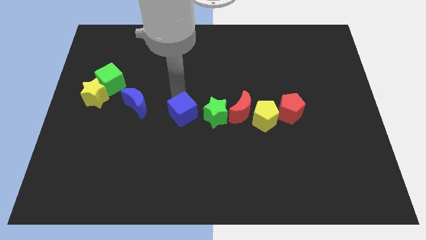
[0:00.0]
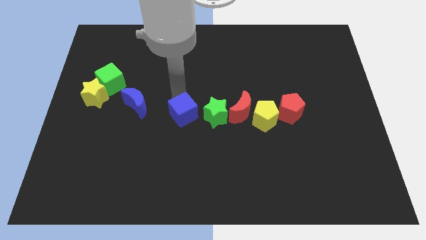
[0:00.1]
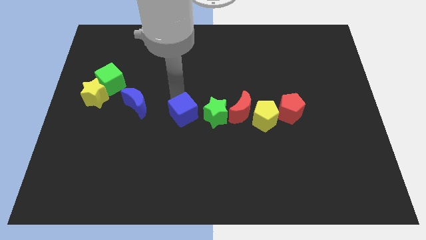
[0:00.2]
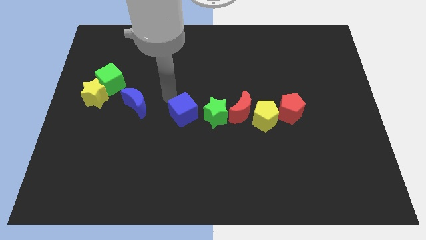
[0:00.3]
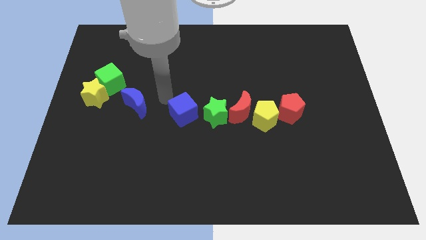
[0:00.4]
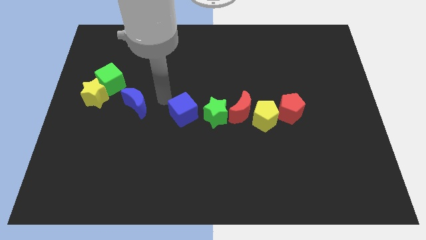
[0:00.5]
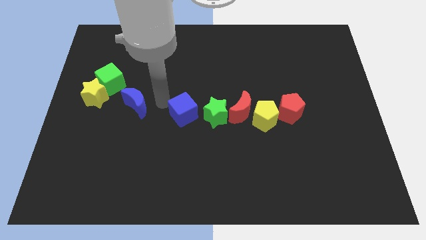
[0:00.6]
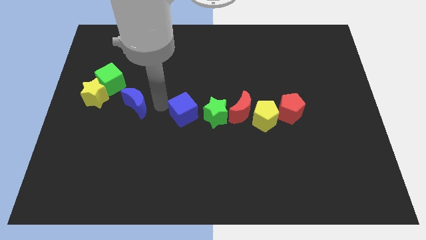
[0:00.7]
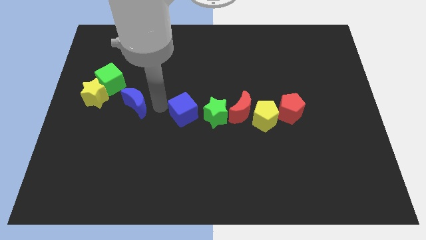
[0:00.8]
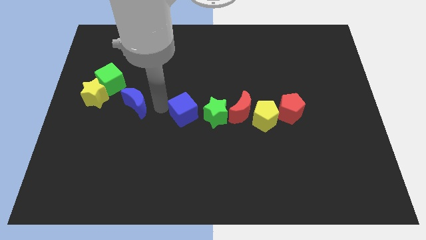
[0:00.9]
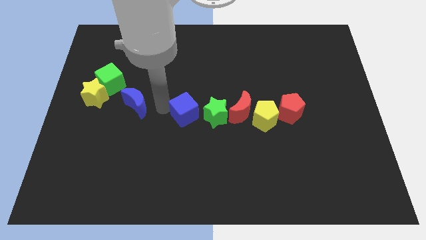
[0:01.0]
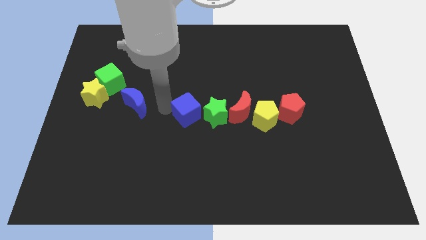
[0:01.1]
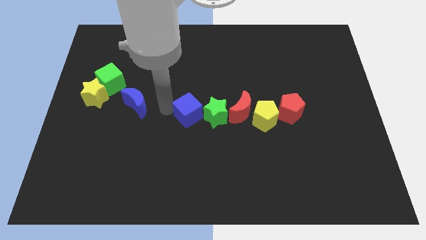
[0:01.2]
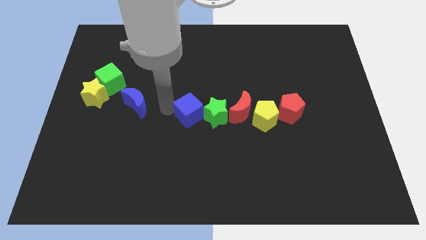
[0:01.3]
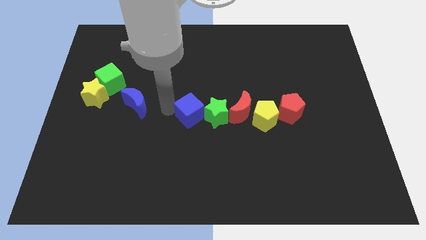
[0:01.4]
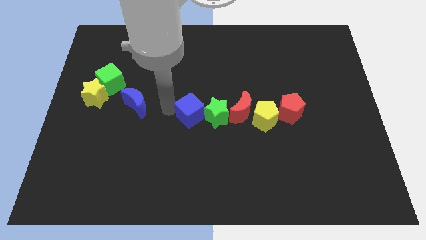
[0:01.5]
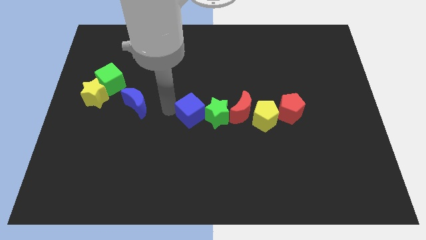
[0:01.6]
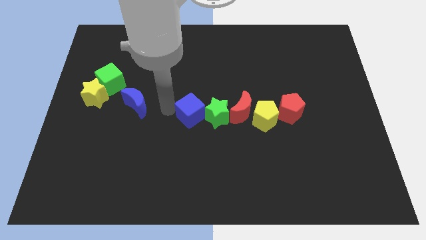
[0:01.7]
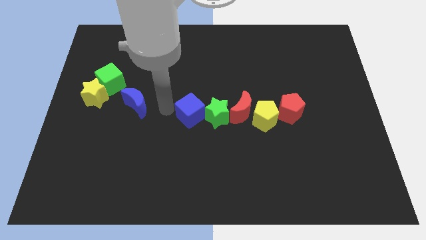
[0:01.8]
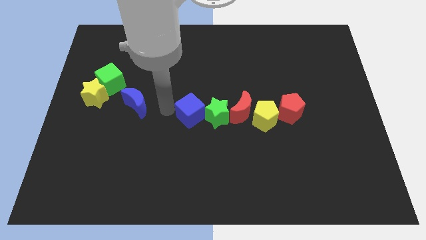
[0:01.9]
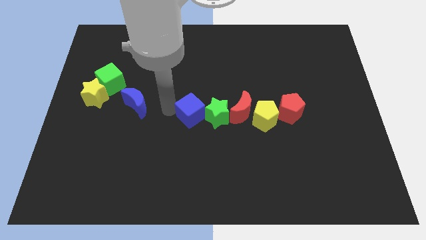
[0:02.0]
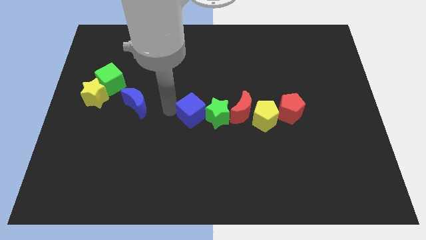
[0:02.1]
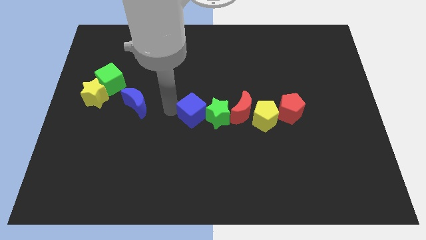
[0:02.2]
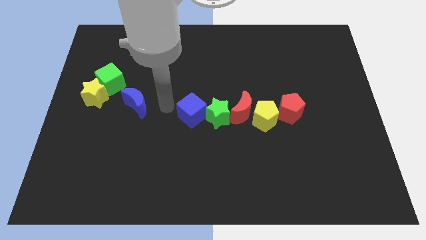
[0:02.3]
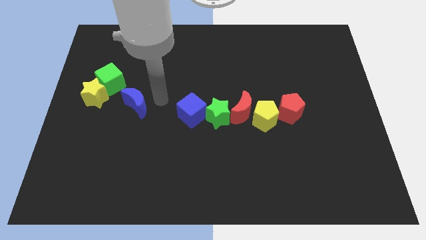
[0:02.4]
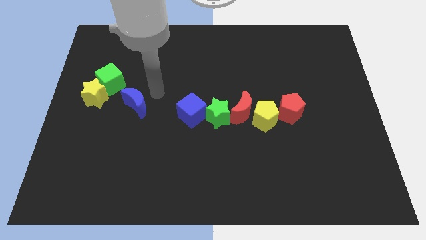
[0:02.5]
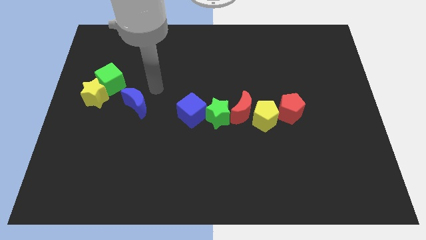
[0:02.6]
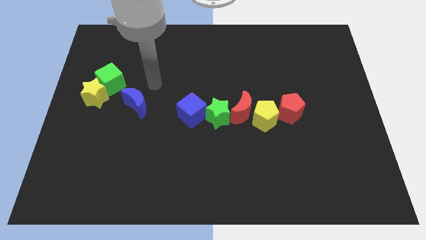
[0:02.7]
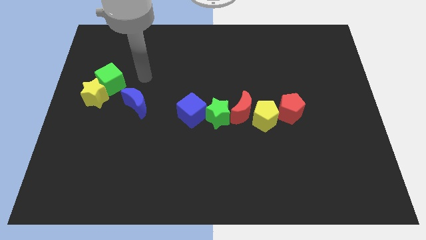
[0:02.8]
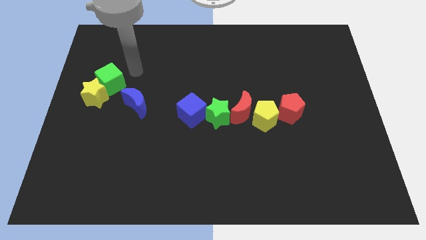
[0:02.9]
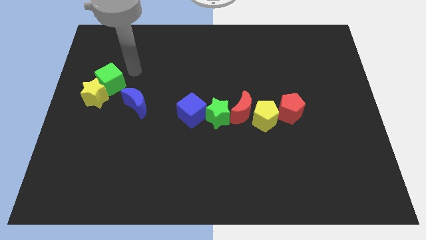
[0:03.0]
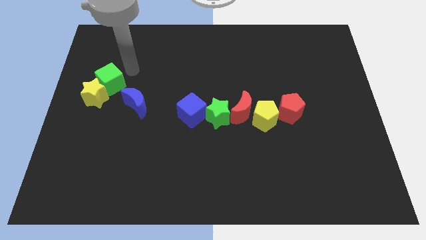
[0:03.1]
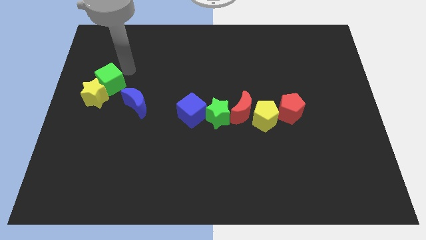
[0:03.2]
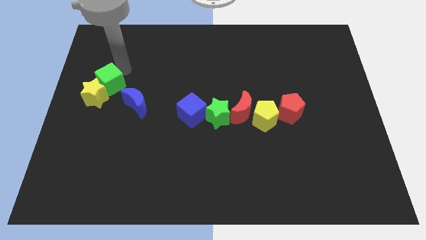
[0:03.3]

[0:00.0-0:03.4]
push the blue moon into the green star

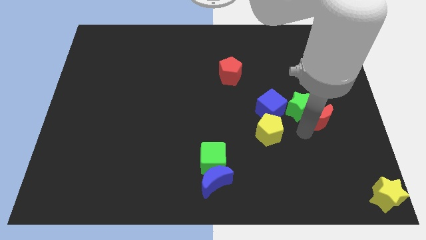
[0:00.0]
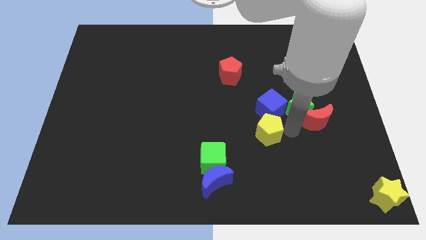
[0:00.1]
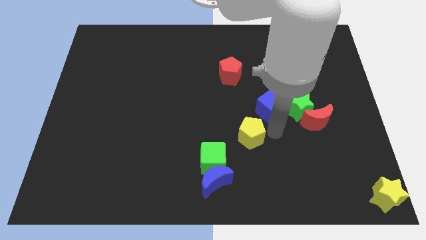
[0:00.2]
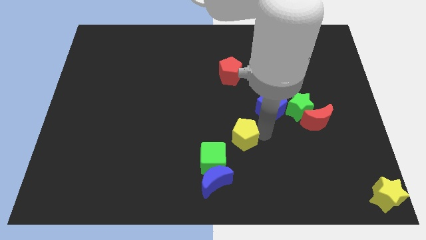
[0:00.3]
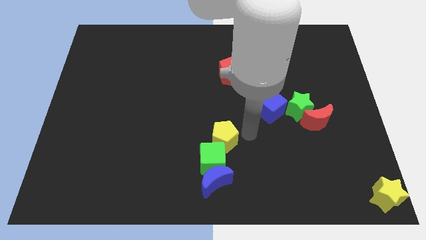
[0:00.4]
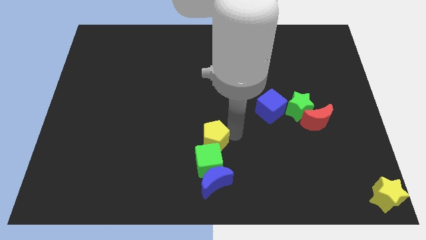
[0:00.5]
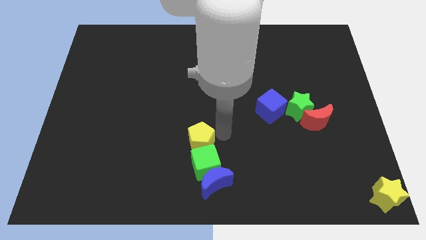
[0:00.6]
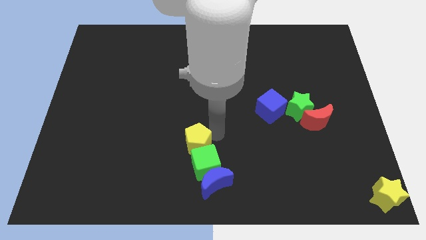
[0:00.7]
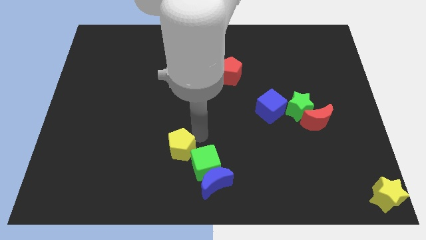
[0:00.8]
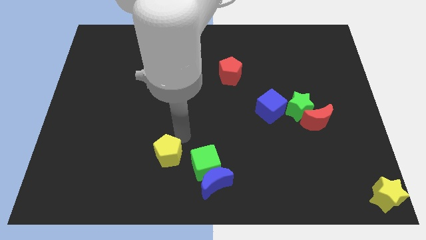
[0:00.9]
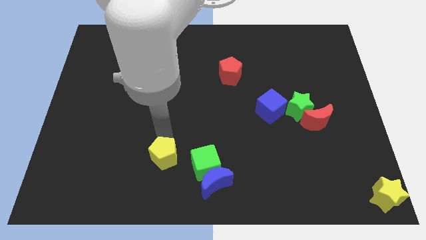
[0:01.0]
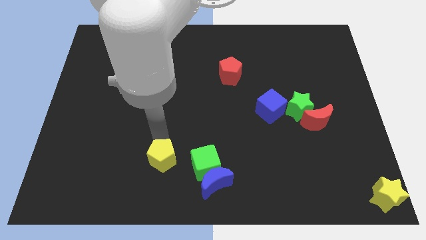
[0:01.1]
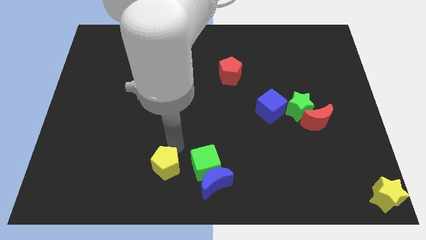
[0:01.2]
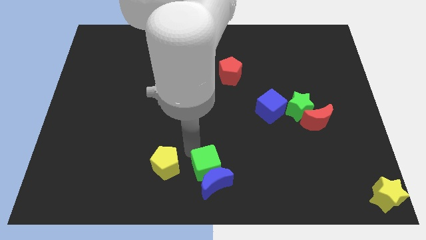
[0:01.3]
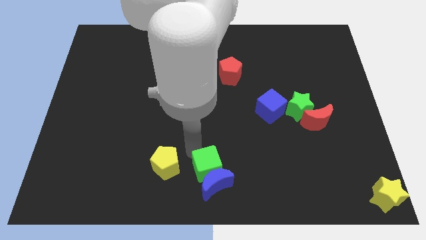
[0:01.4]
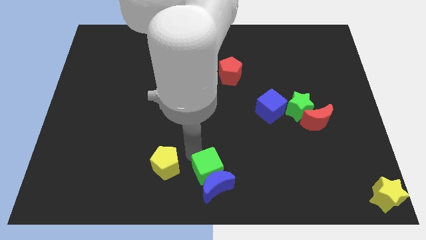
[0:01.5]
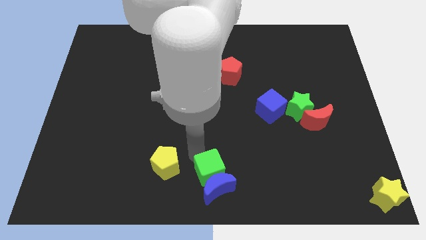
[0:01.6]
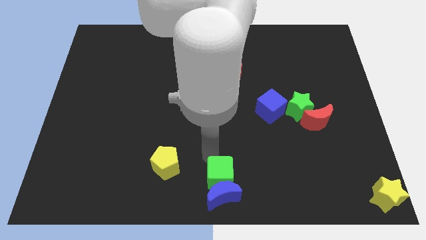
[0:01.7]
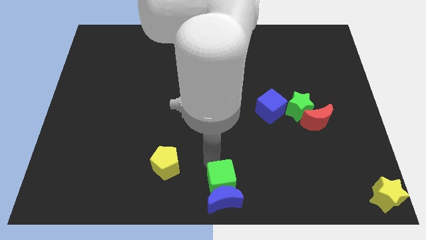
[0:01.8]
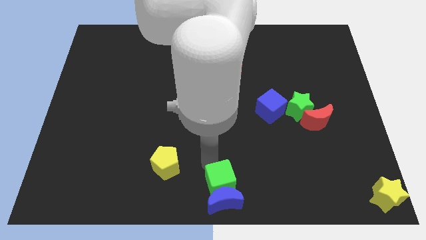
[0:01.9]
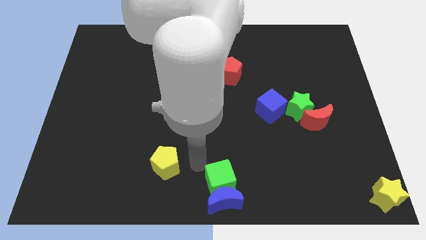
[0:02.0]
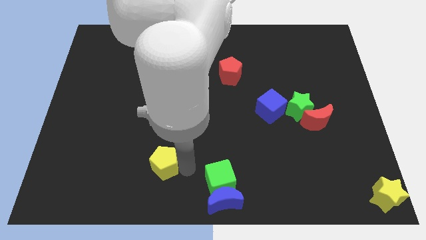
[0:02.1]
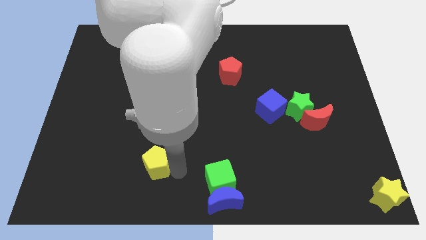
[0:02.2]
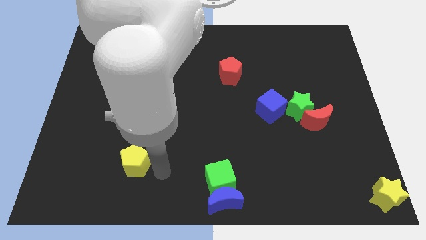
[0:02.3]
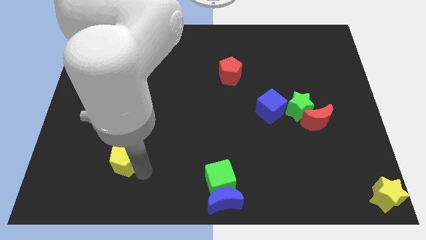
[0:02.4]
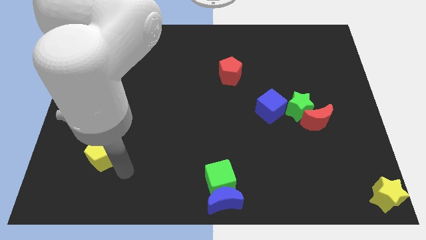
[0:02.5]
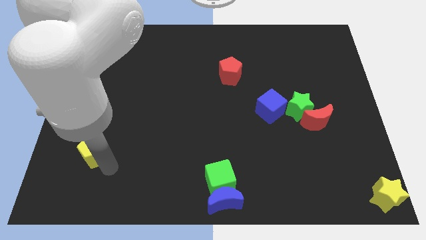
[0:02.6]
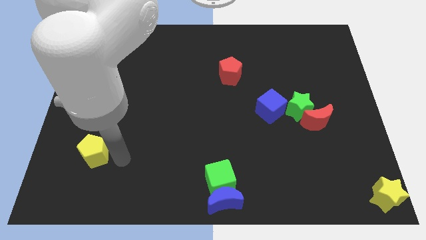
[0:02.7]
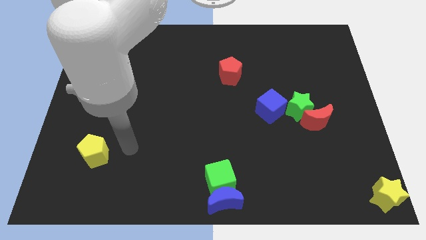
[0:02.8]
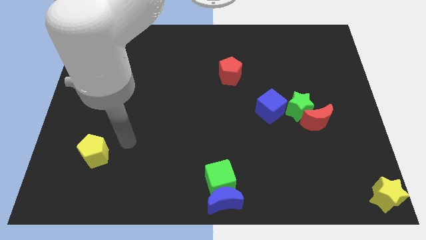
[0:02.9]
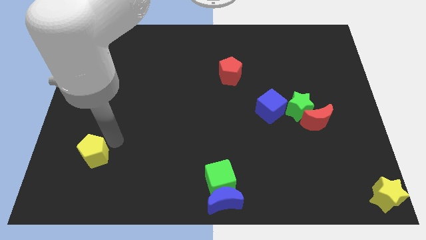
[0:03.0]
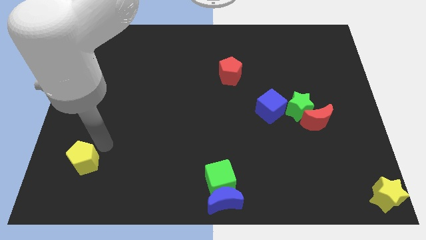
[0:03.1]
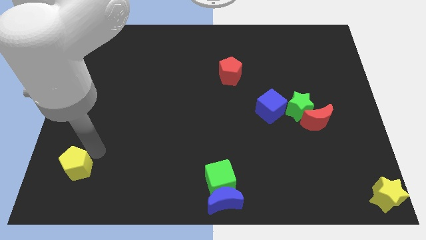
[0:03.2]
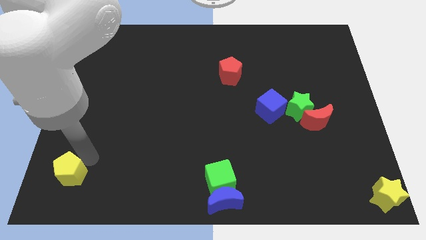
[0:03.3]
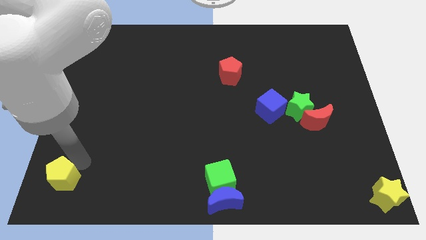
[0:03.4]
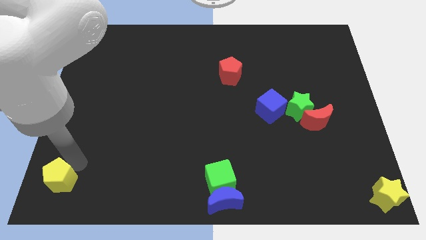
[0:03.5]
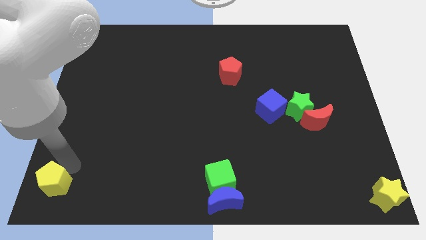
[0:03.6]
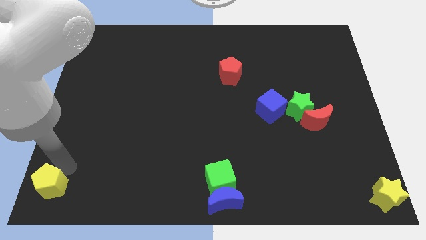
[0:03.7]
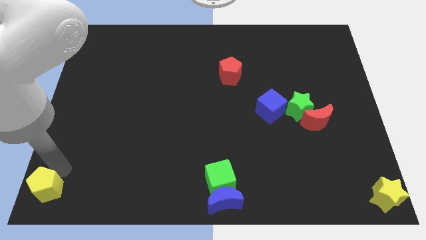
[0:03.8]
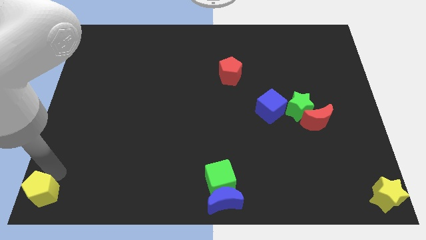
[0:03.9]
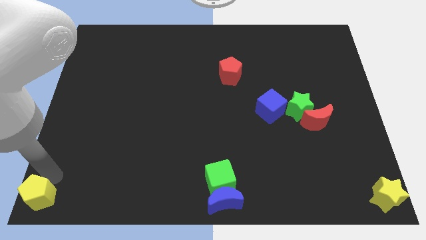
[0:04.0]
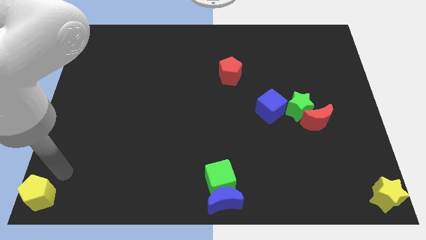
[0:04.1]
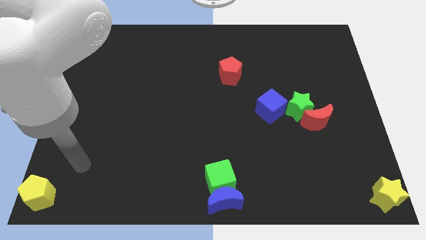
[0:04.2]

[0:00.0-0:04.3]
move the yellow pentagon bottom left

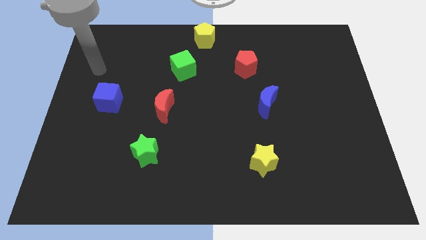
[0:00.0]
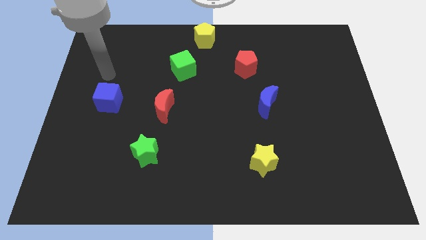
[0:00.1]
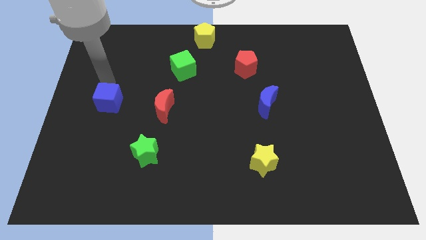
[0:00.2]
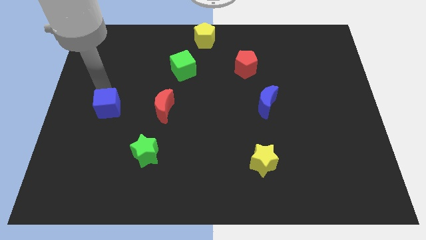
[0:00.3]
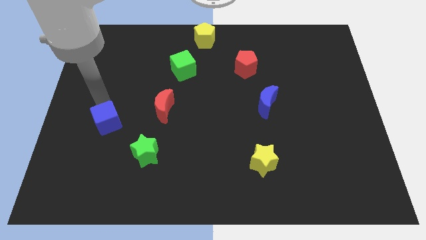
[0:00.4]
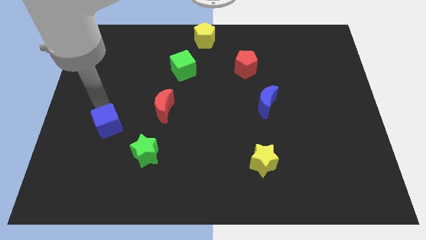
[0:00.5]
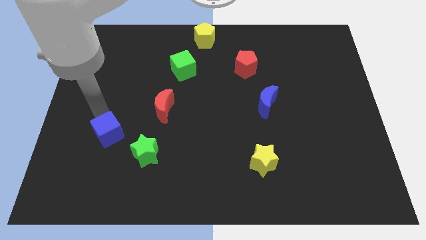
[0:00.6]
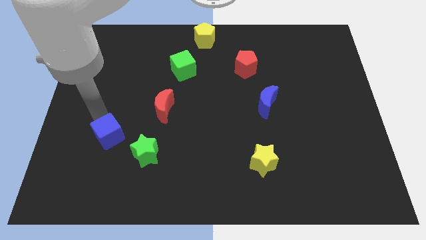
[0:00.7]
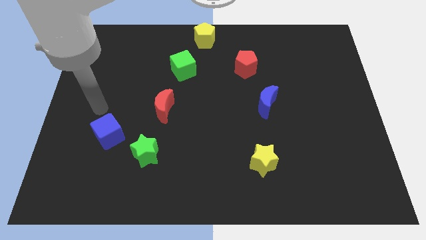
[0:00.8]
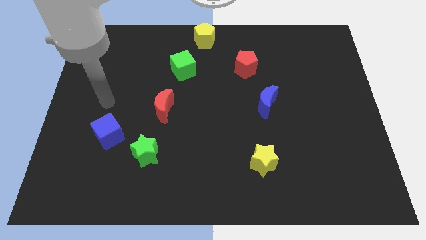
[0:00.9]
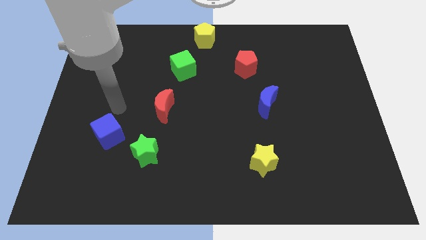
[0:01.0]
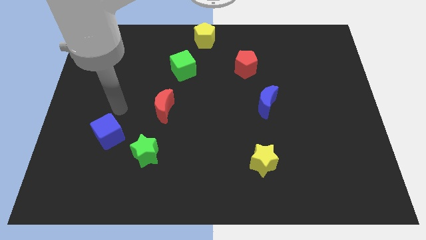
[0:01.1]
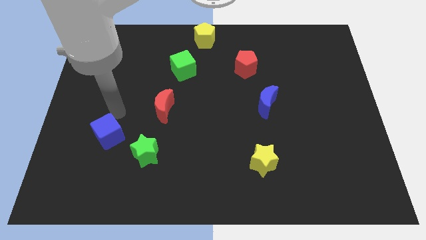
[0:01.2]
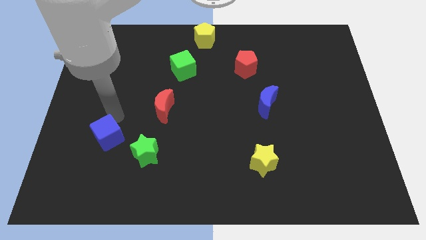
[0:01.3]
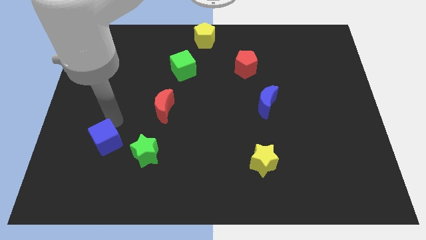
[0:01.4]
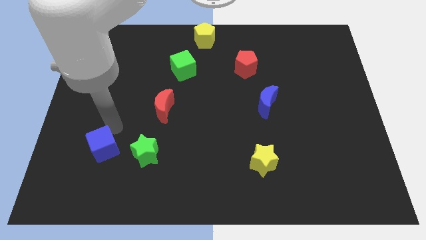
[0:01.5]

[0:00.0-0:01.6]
move the blue cube to the left side of the green star
